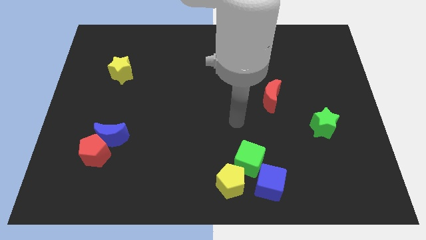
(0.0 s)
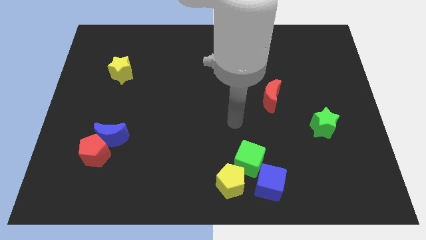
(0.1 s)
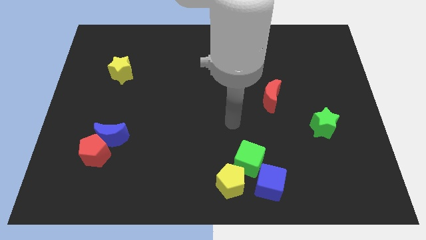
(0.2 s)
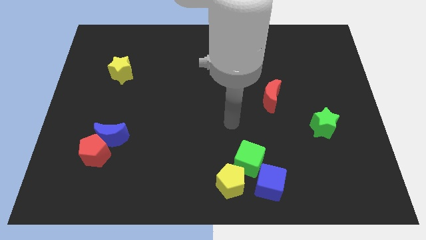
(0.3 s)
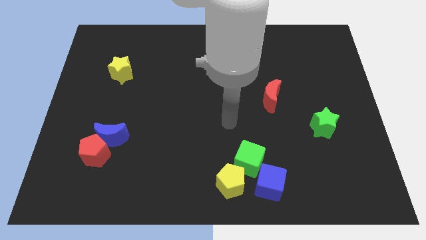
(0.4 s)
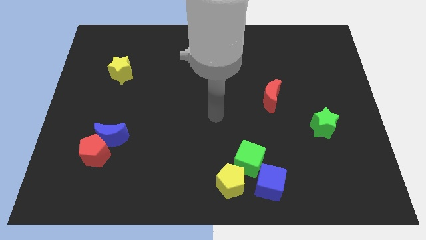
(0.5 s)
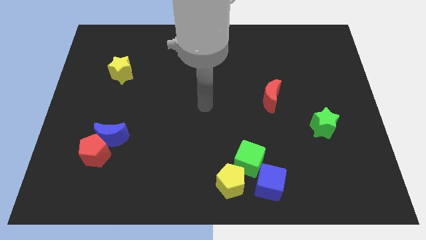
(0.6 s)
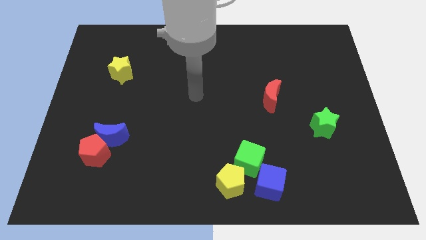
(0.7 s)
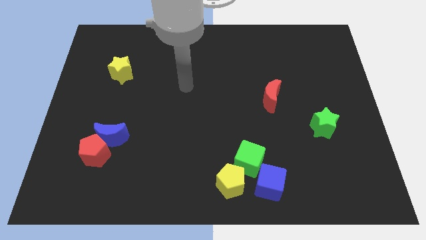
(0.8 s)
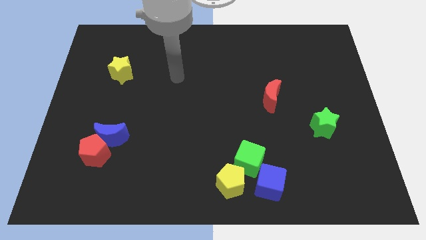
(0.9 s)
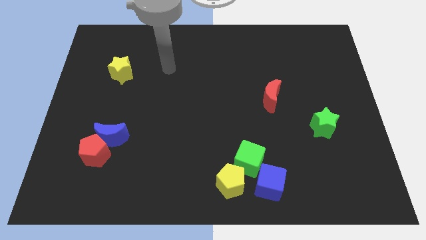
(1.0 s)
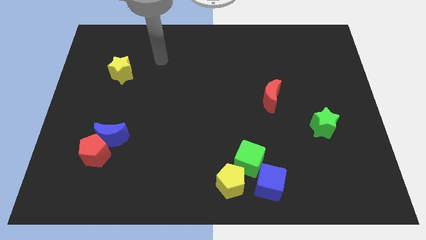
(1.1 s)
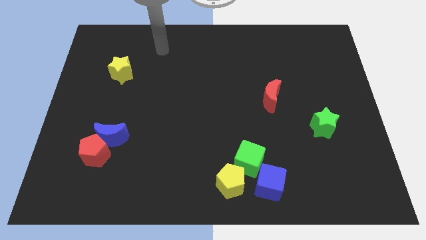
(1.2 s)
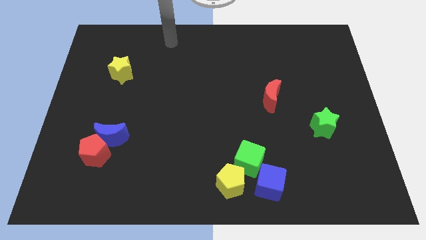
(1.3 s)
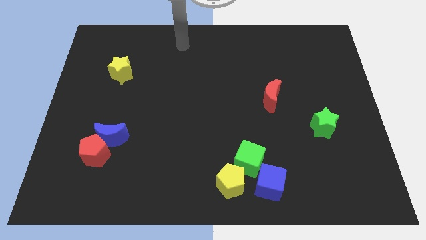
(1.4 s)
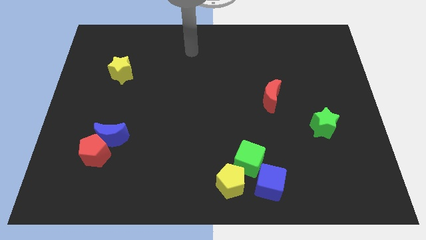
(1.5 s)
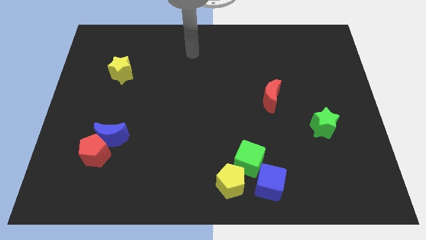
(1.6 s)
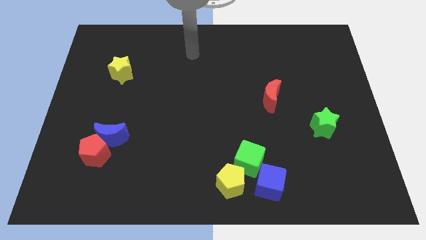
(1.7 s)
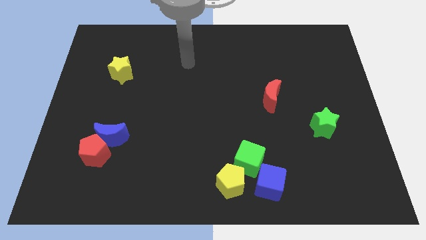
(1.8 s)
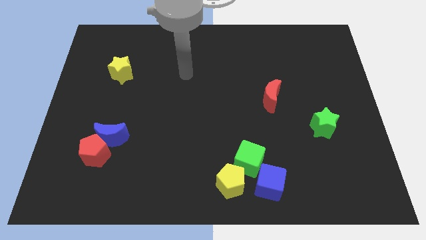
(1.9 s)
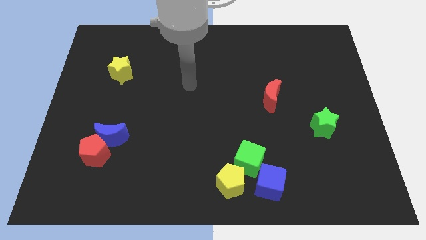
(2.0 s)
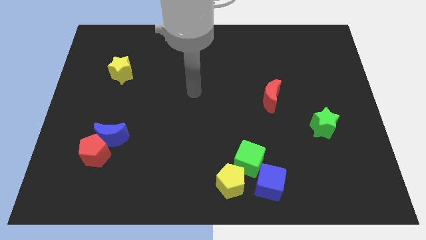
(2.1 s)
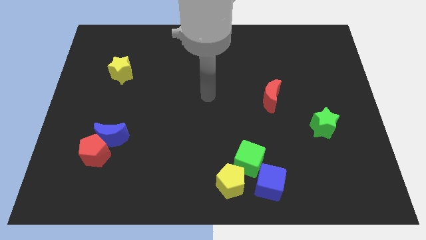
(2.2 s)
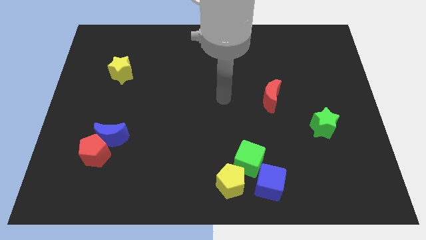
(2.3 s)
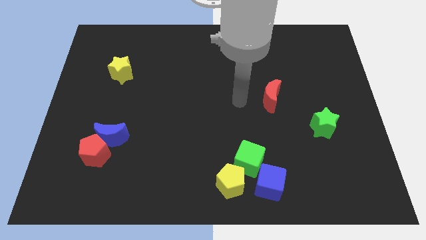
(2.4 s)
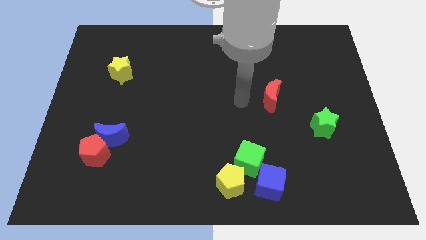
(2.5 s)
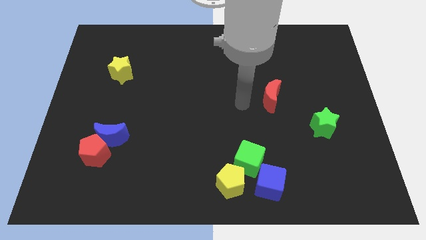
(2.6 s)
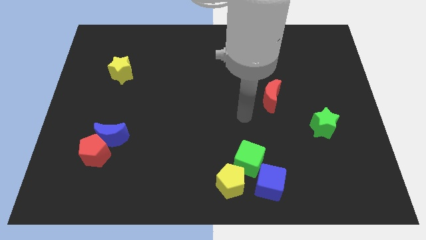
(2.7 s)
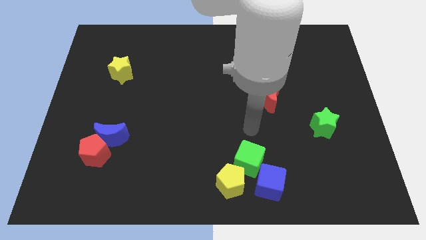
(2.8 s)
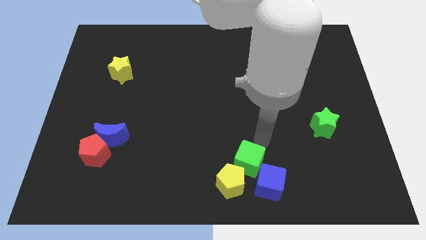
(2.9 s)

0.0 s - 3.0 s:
go near the green cube

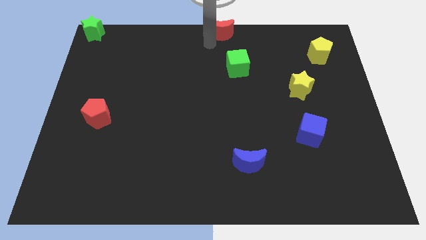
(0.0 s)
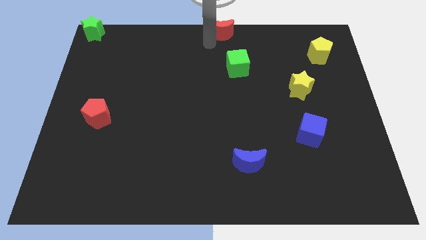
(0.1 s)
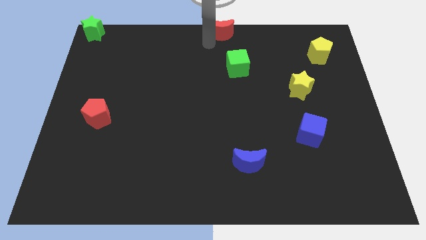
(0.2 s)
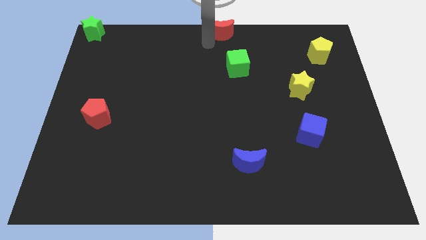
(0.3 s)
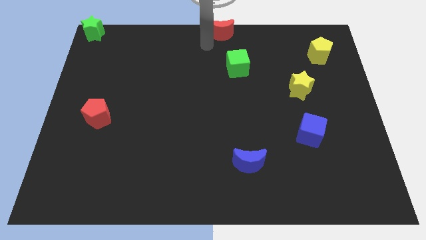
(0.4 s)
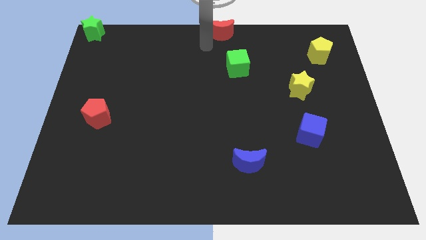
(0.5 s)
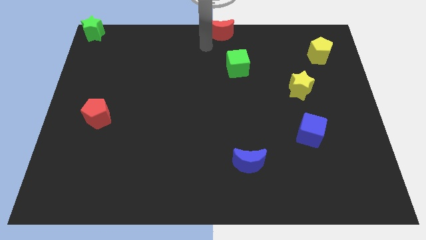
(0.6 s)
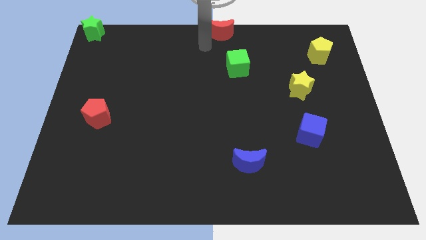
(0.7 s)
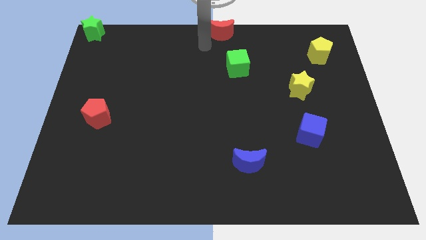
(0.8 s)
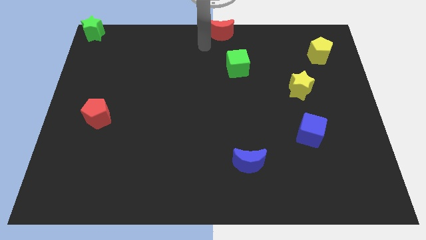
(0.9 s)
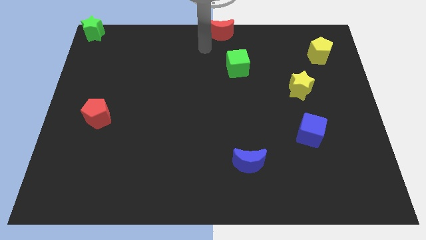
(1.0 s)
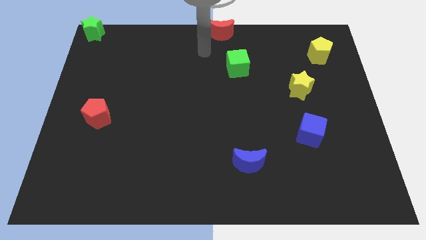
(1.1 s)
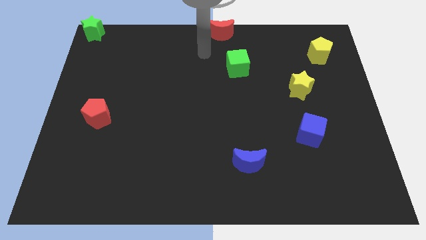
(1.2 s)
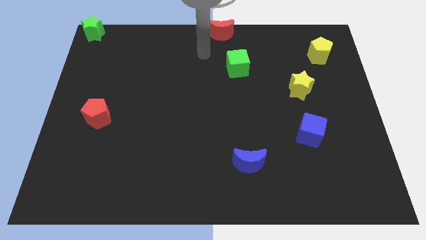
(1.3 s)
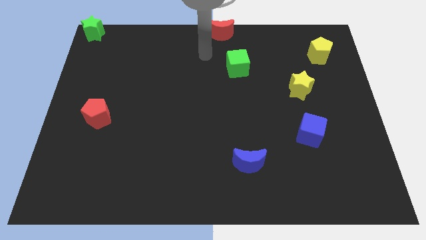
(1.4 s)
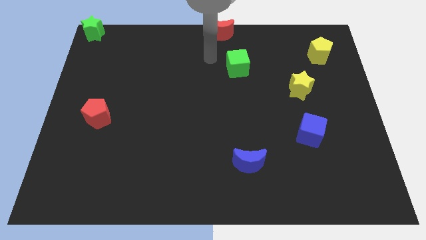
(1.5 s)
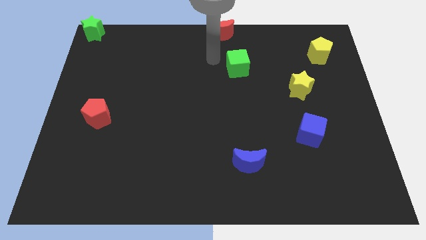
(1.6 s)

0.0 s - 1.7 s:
move the arm towards the green cube

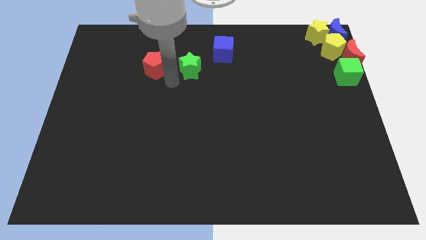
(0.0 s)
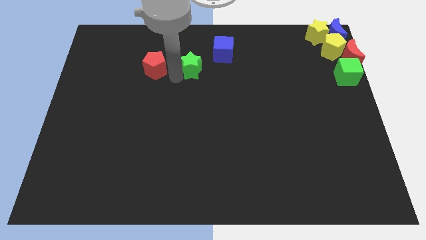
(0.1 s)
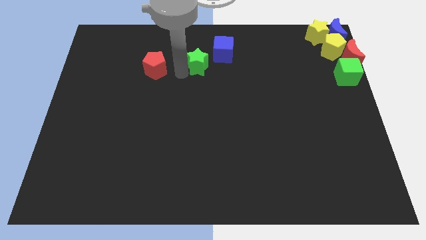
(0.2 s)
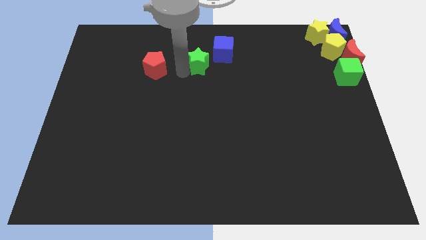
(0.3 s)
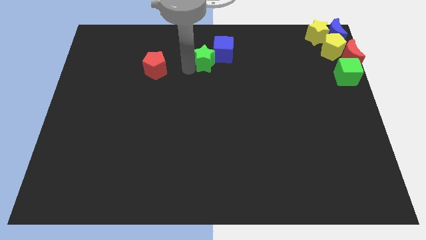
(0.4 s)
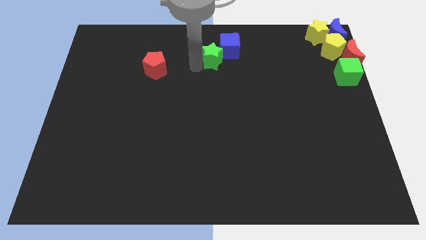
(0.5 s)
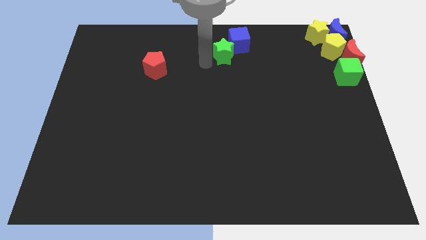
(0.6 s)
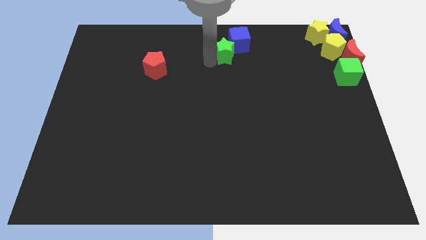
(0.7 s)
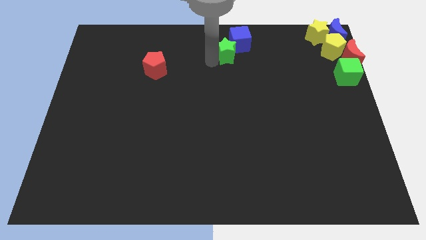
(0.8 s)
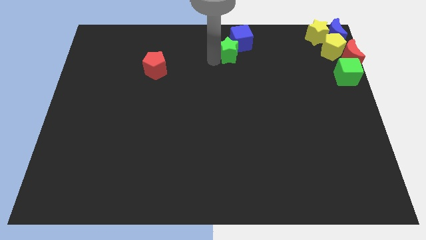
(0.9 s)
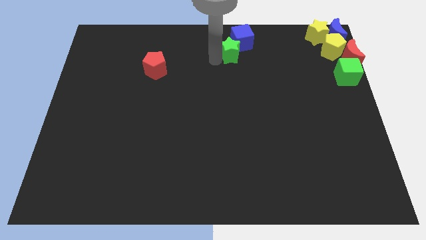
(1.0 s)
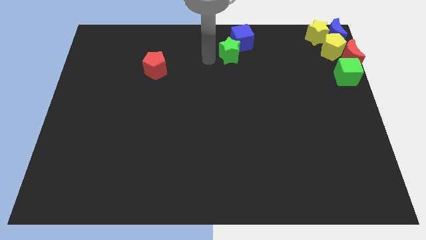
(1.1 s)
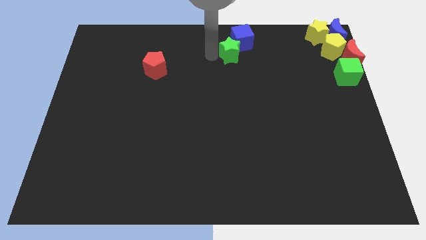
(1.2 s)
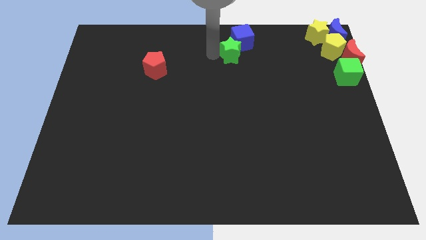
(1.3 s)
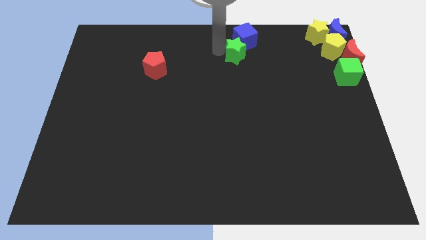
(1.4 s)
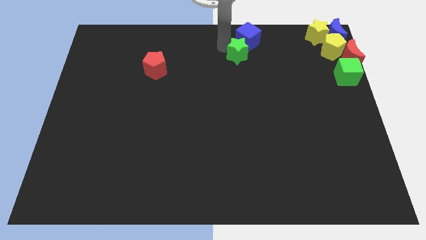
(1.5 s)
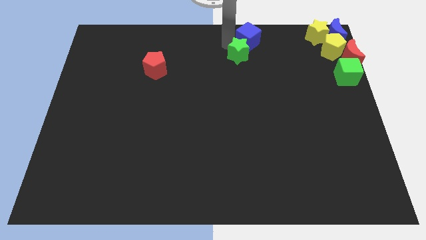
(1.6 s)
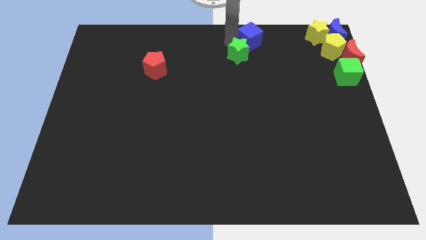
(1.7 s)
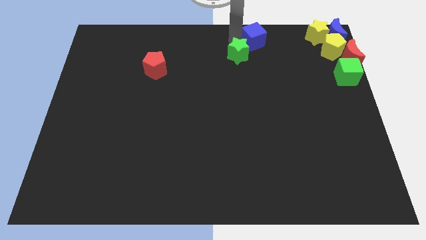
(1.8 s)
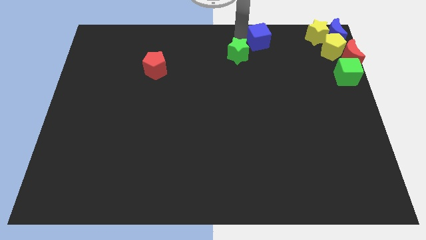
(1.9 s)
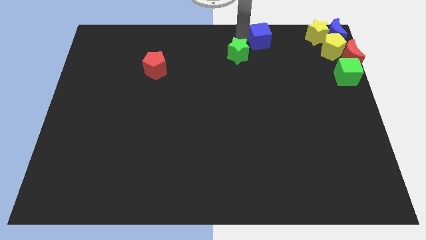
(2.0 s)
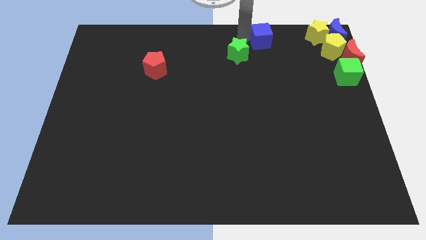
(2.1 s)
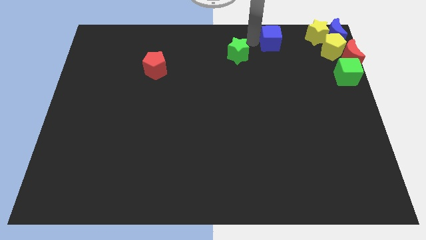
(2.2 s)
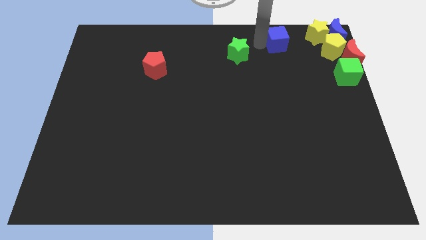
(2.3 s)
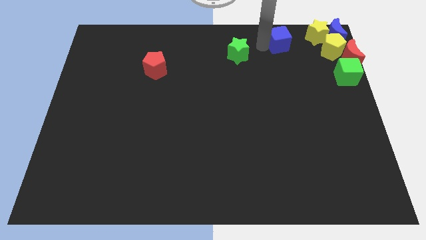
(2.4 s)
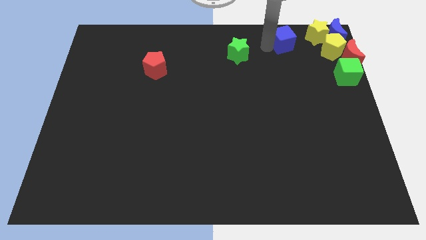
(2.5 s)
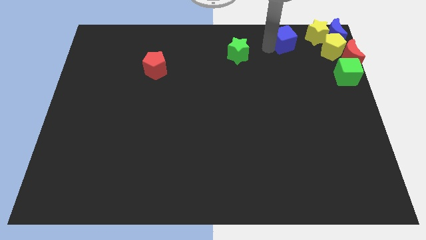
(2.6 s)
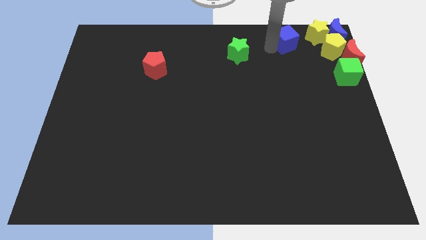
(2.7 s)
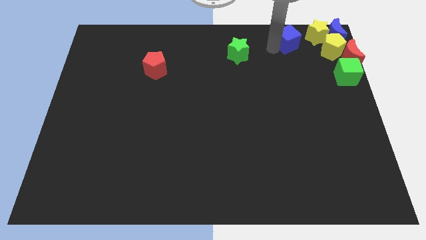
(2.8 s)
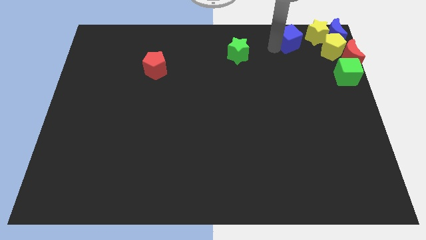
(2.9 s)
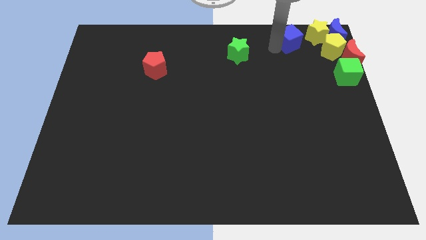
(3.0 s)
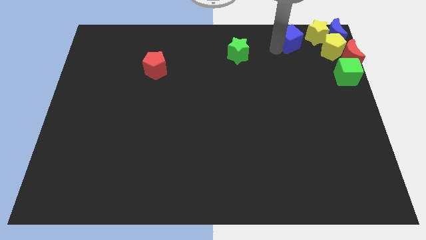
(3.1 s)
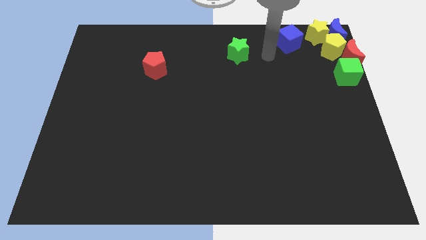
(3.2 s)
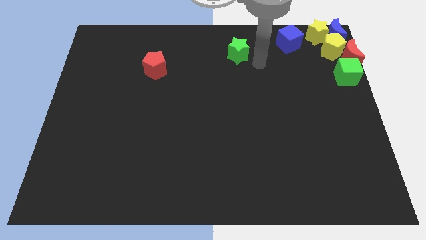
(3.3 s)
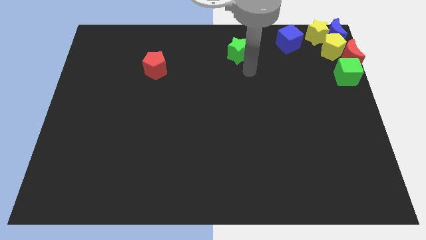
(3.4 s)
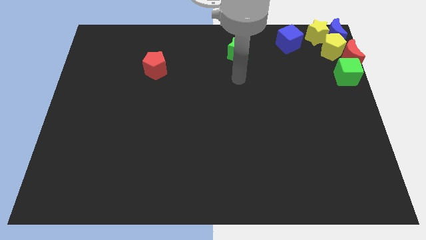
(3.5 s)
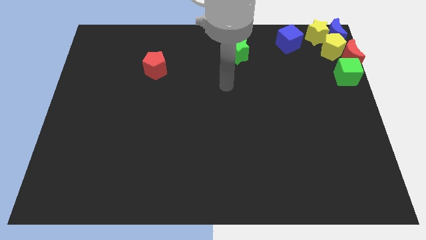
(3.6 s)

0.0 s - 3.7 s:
move the blue cube towards the yellow star

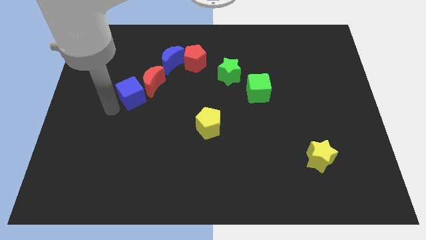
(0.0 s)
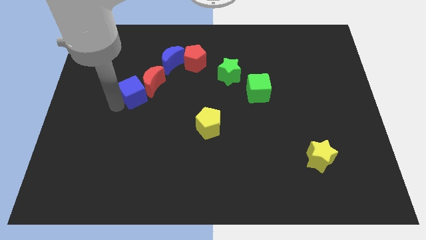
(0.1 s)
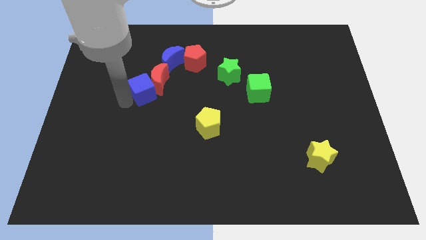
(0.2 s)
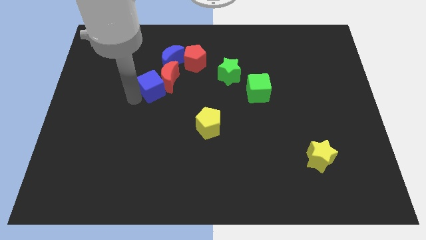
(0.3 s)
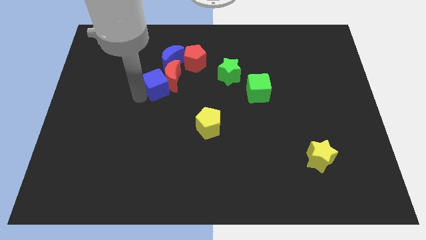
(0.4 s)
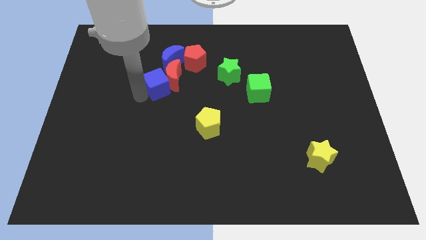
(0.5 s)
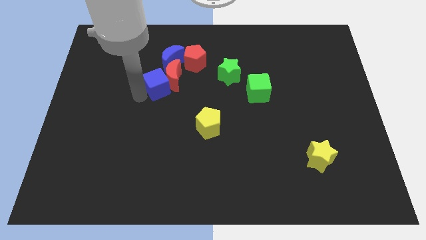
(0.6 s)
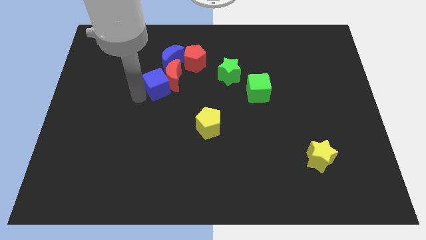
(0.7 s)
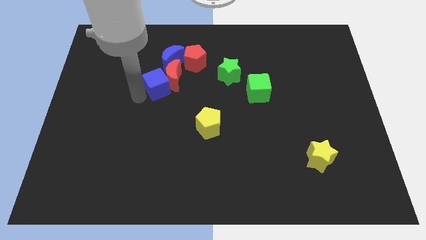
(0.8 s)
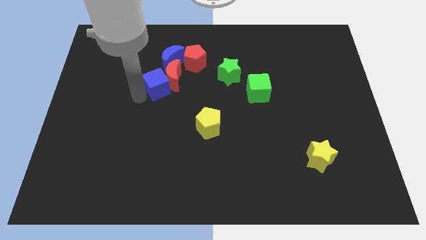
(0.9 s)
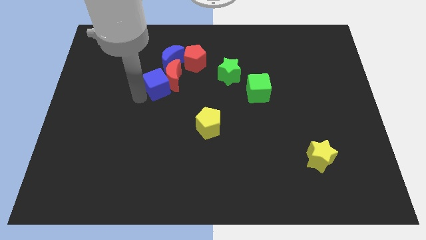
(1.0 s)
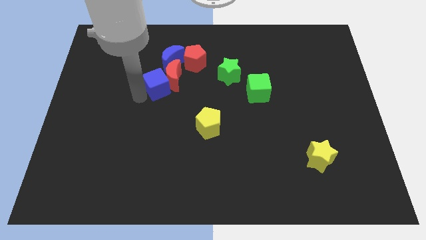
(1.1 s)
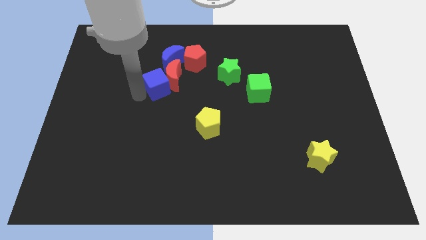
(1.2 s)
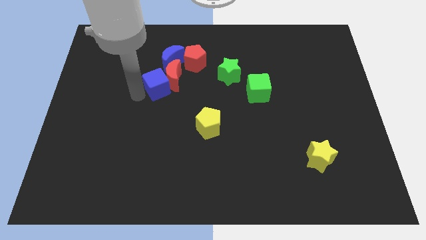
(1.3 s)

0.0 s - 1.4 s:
move the blue cube and red moon upward right
